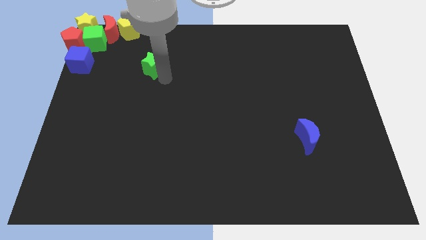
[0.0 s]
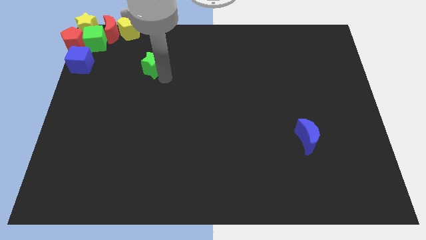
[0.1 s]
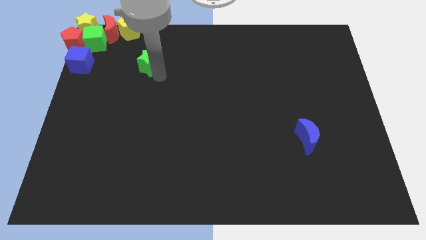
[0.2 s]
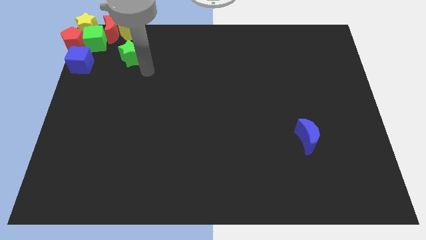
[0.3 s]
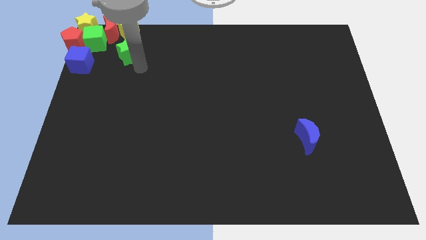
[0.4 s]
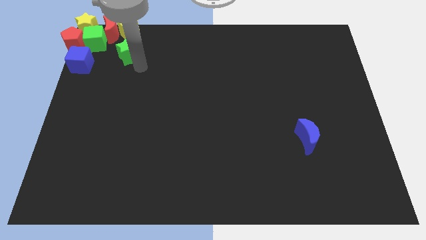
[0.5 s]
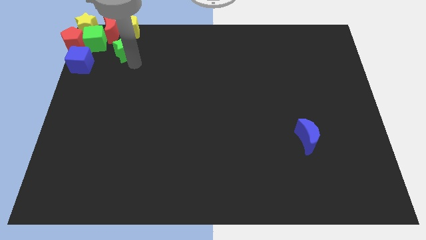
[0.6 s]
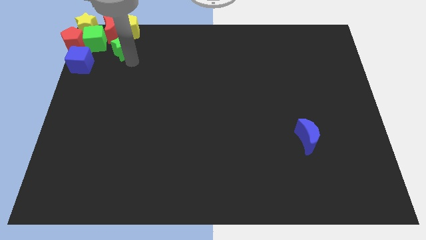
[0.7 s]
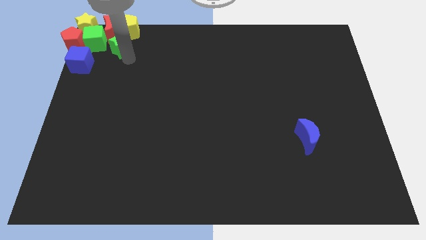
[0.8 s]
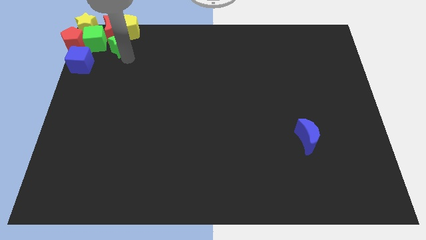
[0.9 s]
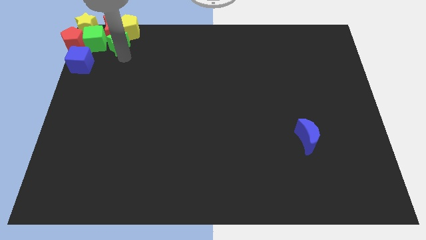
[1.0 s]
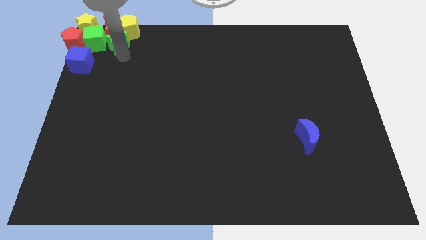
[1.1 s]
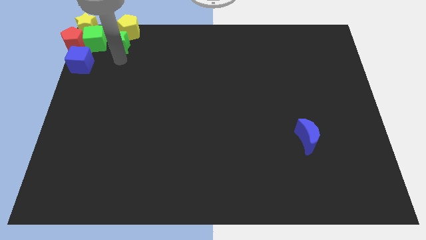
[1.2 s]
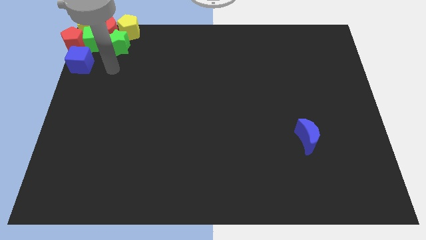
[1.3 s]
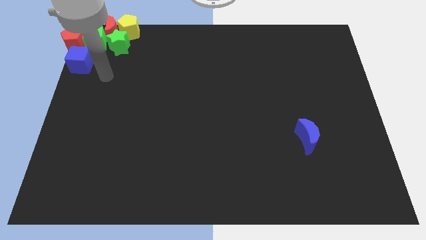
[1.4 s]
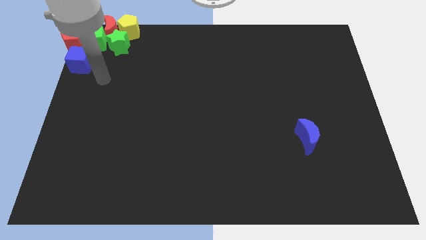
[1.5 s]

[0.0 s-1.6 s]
push the green star into the red moon

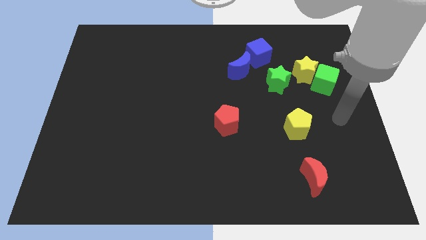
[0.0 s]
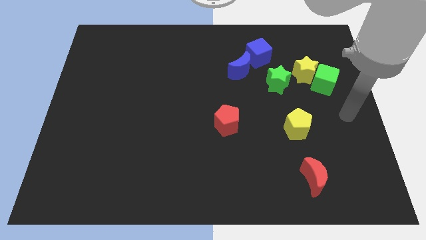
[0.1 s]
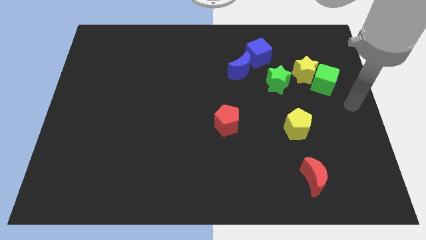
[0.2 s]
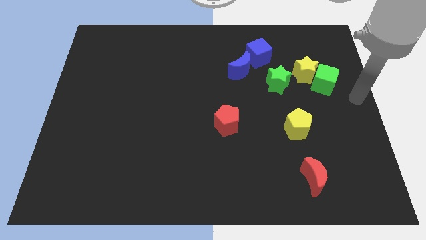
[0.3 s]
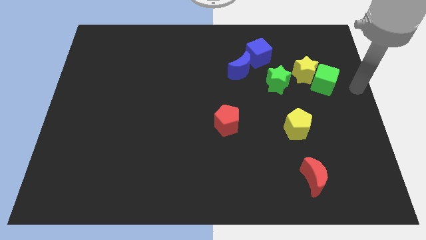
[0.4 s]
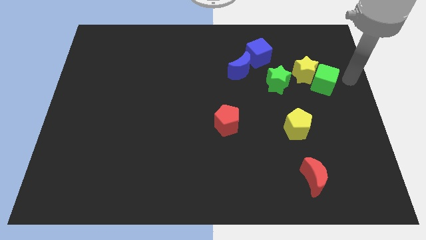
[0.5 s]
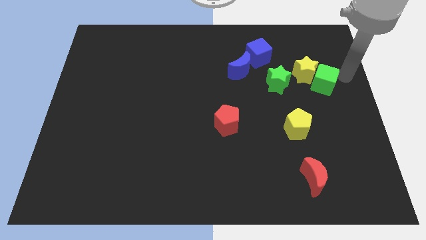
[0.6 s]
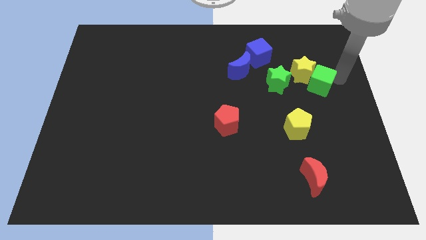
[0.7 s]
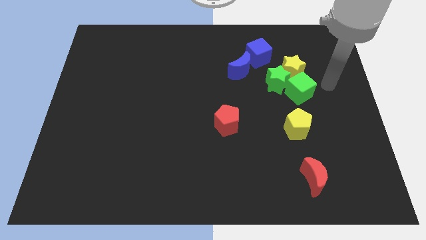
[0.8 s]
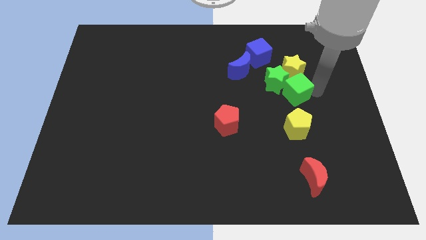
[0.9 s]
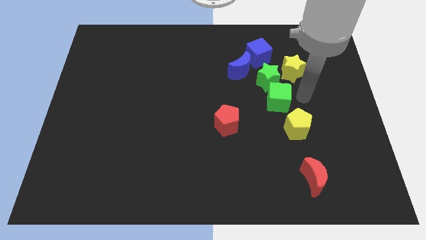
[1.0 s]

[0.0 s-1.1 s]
place the green cube below the green star

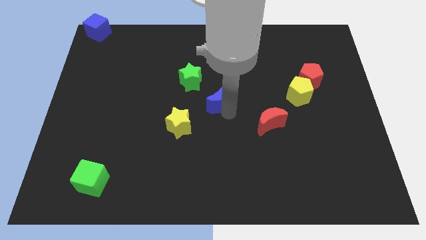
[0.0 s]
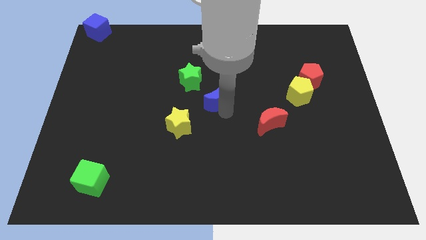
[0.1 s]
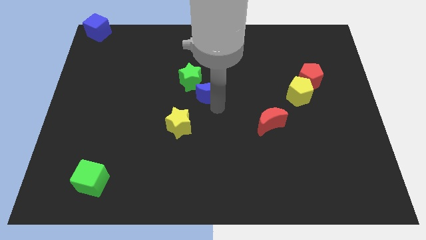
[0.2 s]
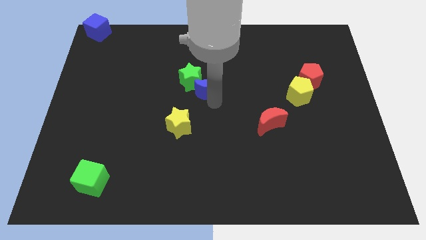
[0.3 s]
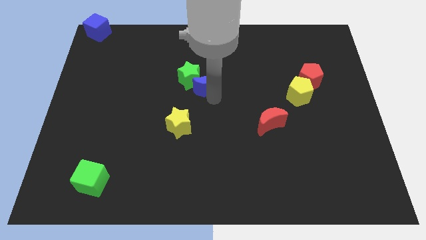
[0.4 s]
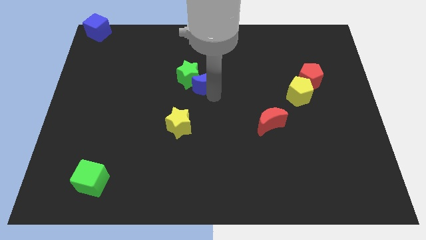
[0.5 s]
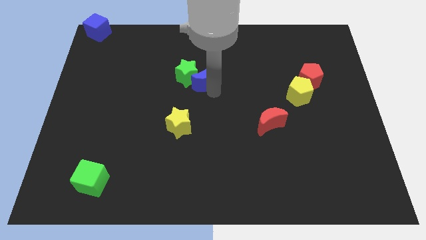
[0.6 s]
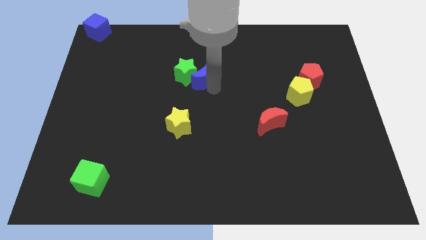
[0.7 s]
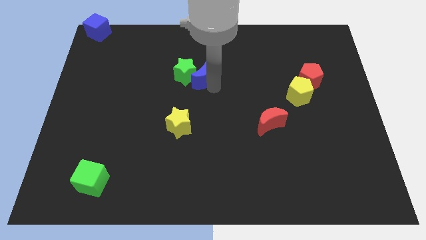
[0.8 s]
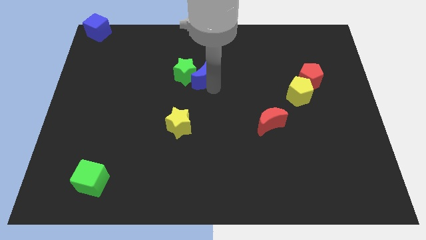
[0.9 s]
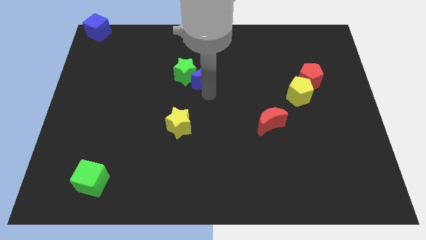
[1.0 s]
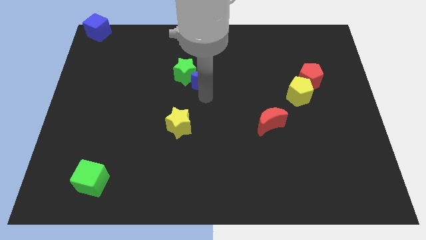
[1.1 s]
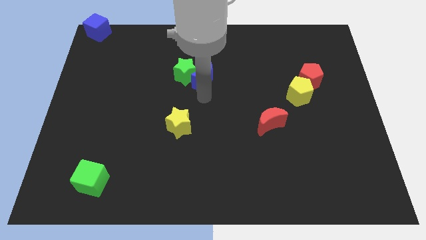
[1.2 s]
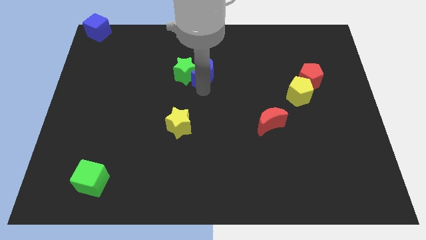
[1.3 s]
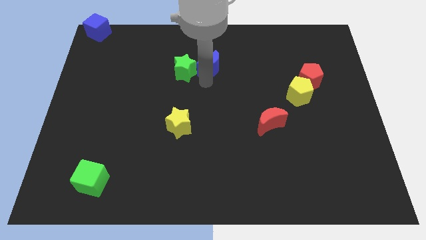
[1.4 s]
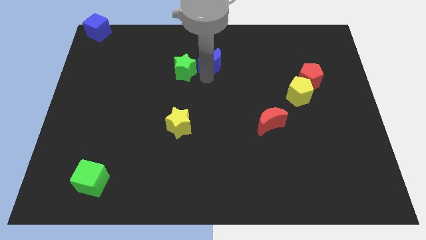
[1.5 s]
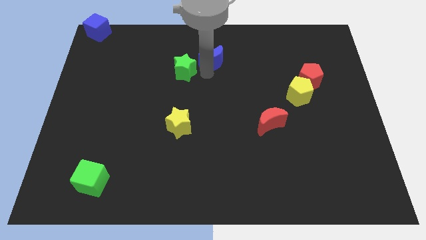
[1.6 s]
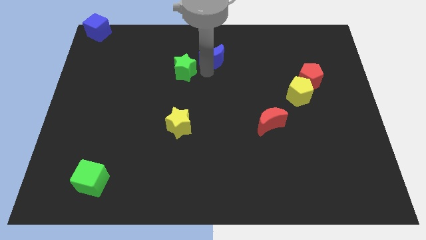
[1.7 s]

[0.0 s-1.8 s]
push the blue moon into the green star

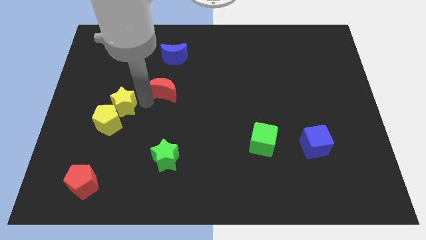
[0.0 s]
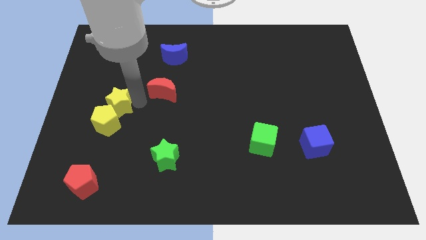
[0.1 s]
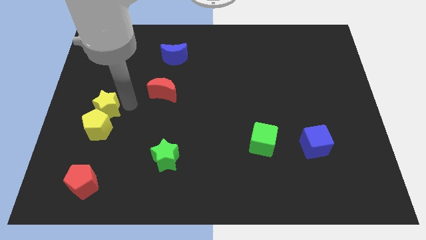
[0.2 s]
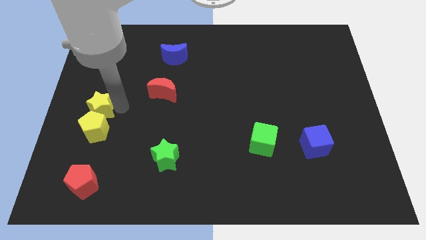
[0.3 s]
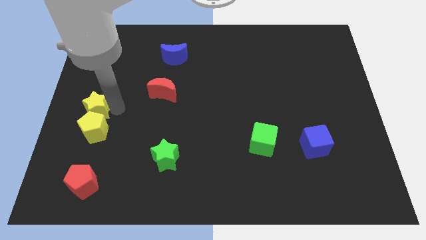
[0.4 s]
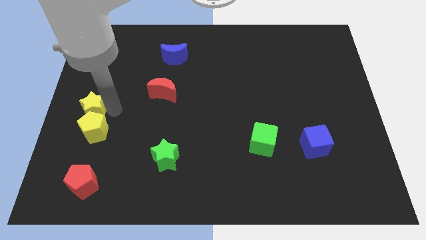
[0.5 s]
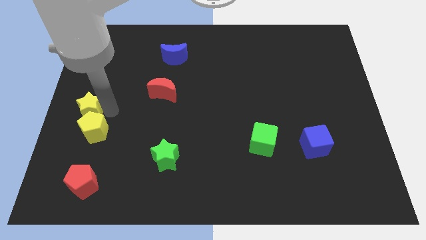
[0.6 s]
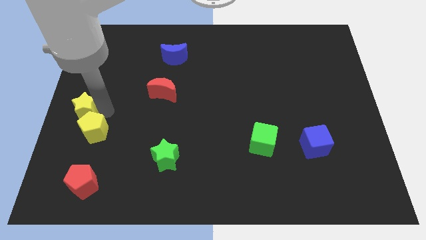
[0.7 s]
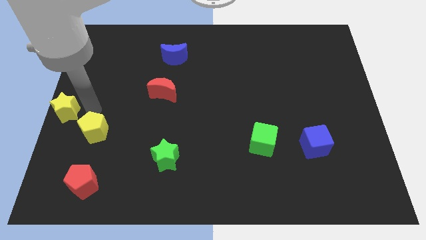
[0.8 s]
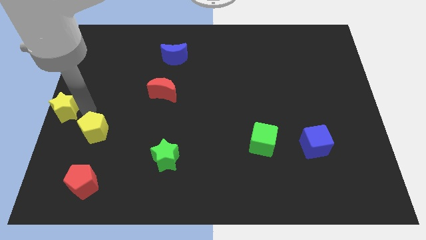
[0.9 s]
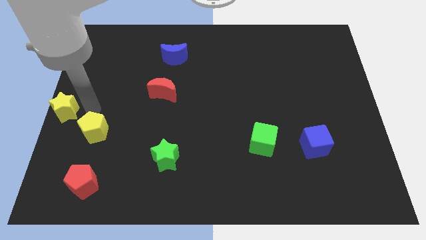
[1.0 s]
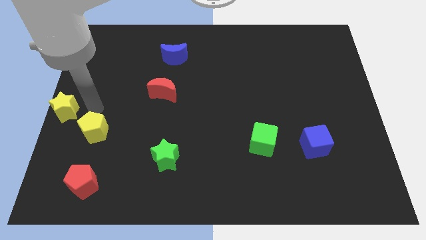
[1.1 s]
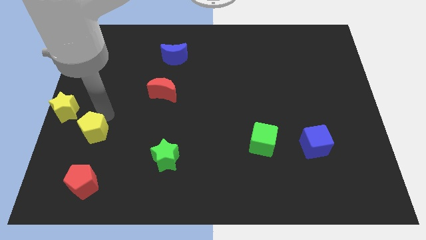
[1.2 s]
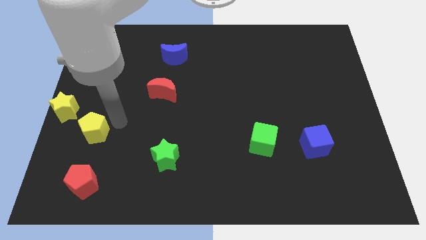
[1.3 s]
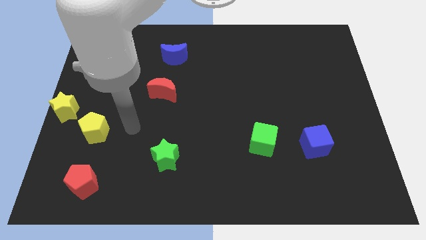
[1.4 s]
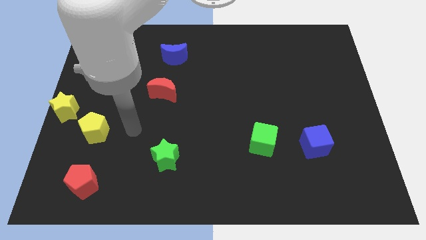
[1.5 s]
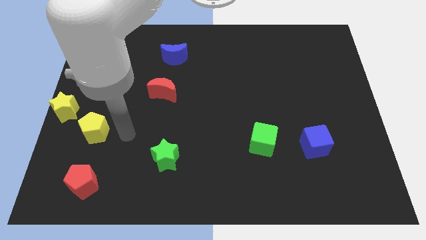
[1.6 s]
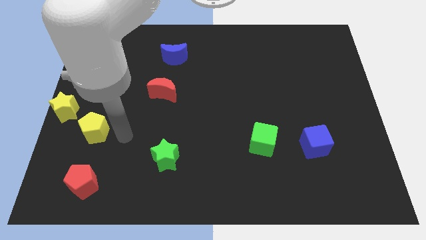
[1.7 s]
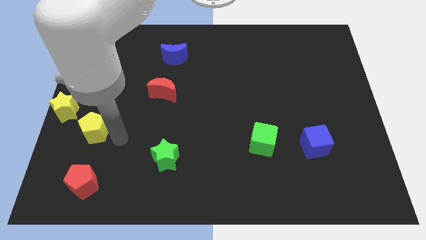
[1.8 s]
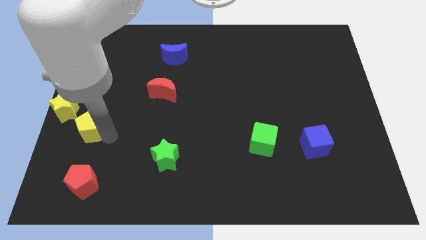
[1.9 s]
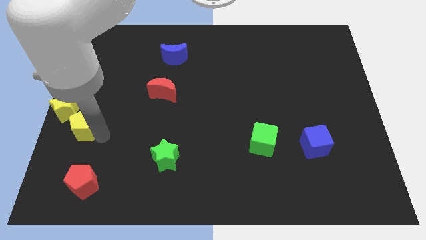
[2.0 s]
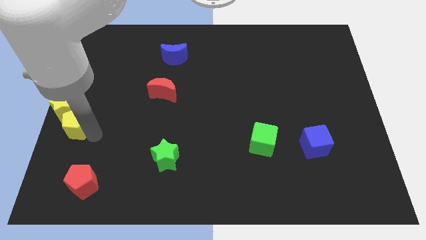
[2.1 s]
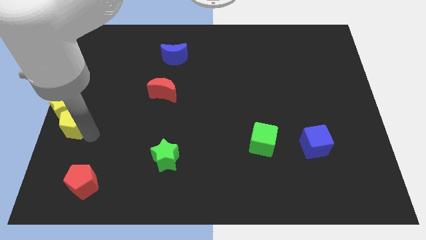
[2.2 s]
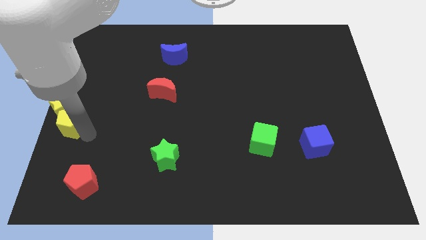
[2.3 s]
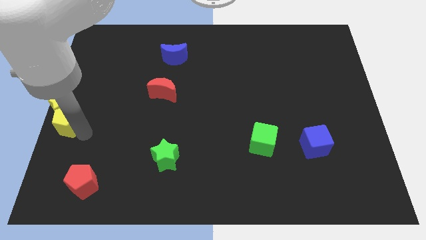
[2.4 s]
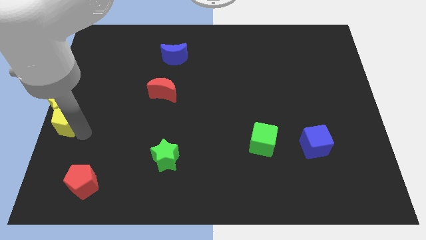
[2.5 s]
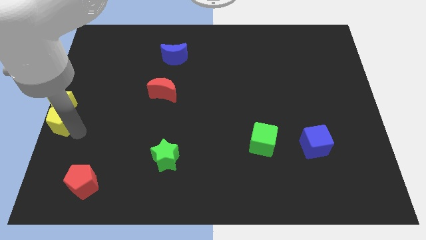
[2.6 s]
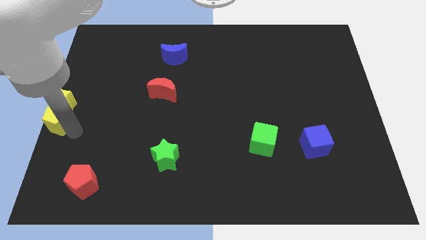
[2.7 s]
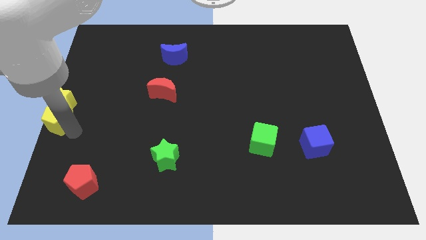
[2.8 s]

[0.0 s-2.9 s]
place yellow pentagon below yellow star

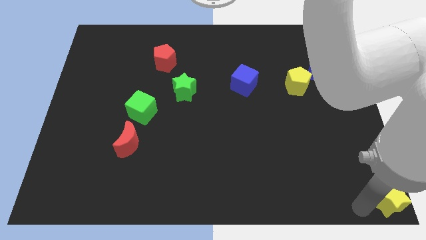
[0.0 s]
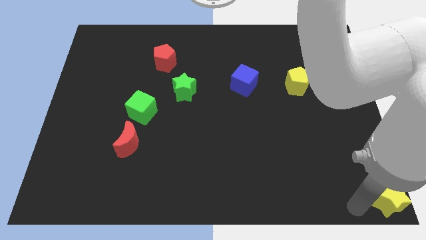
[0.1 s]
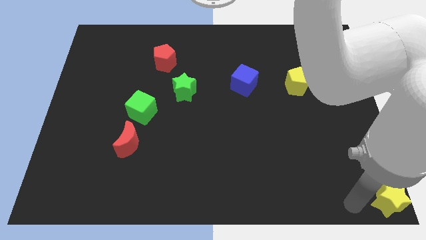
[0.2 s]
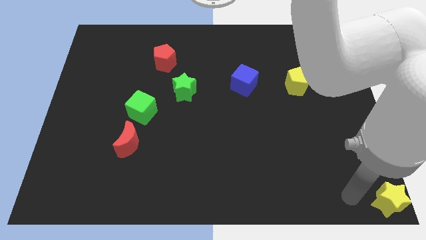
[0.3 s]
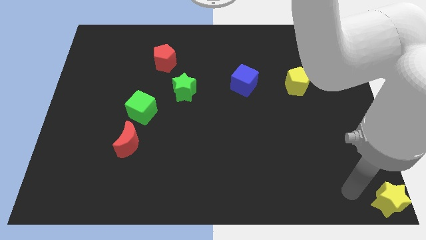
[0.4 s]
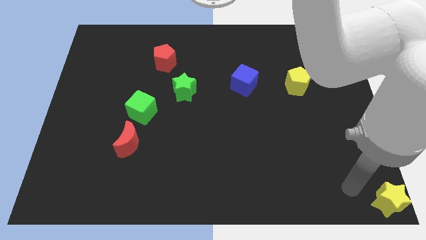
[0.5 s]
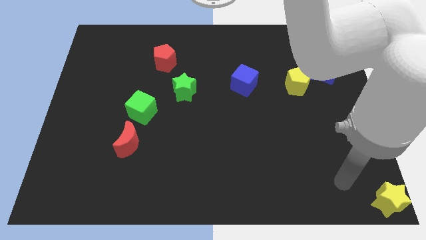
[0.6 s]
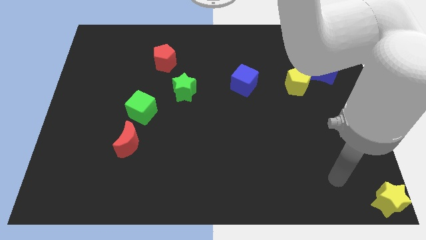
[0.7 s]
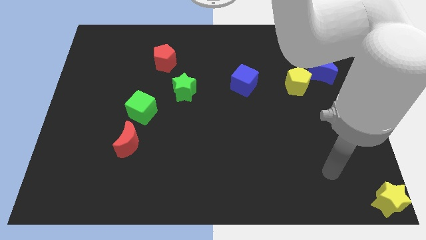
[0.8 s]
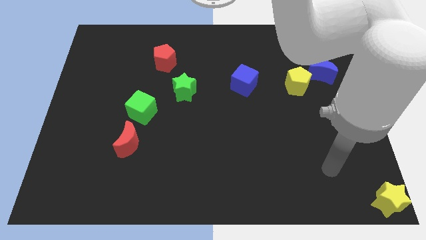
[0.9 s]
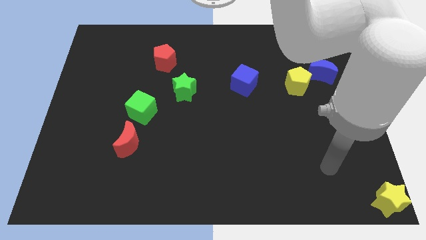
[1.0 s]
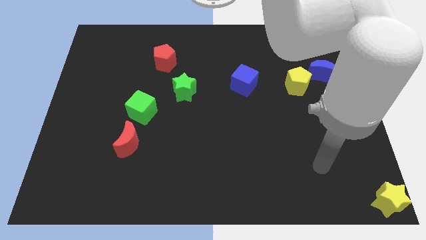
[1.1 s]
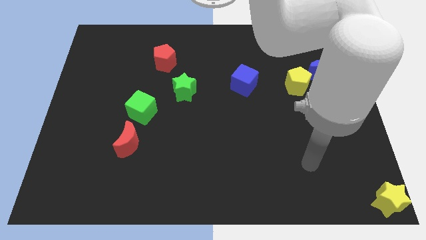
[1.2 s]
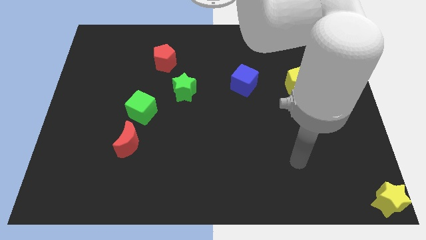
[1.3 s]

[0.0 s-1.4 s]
move the arm away from the yellow star
